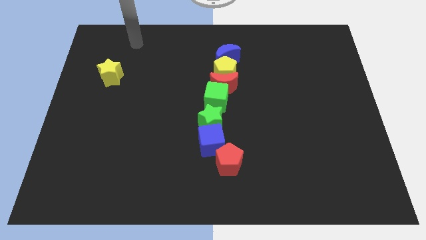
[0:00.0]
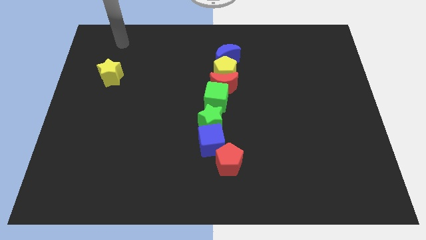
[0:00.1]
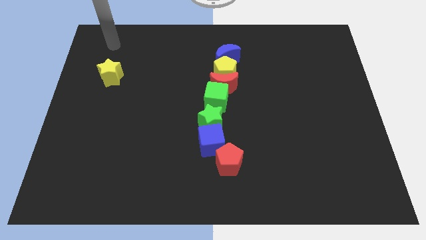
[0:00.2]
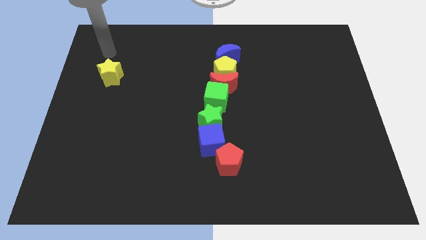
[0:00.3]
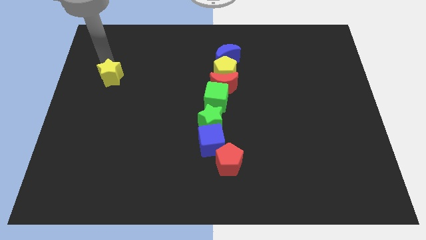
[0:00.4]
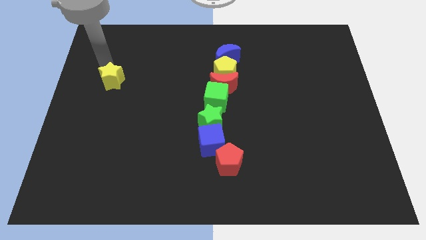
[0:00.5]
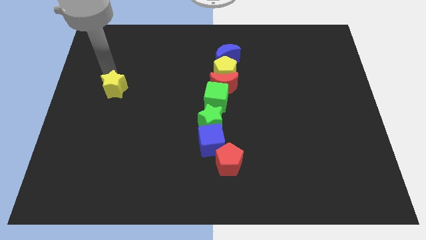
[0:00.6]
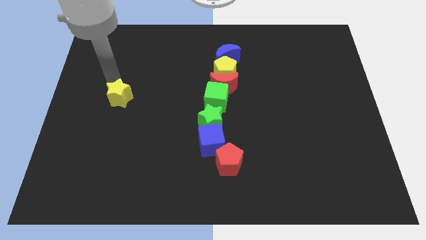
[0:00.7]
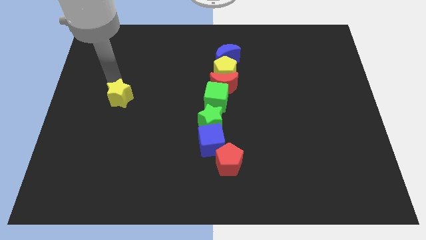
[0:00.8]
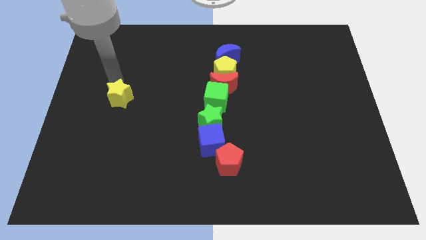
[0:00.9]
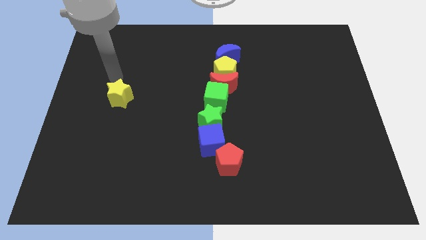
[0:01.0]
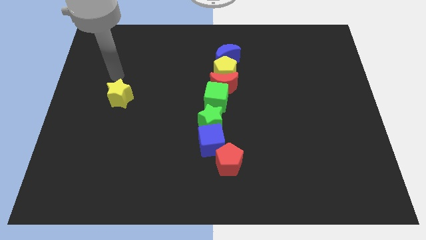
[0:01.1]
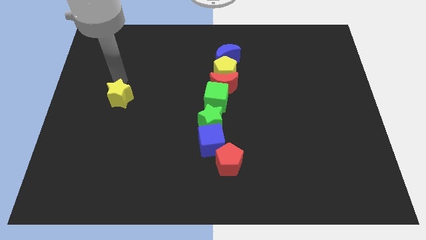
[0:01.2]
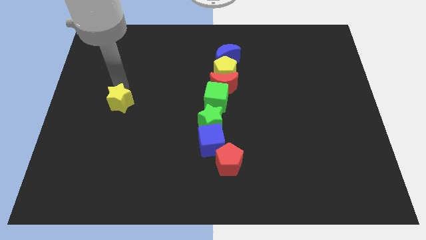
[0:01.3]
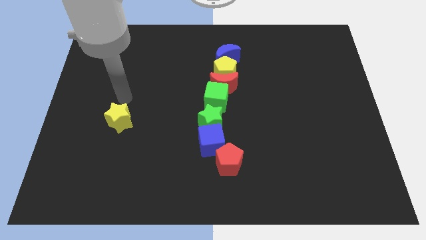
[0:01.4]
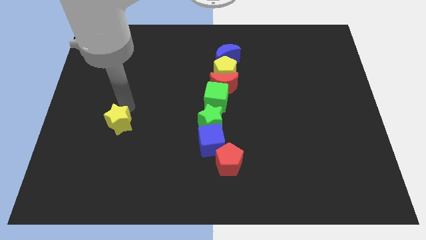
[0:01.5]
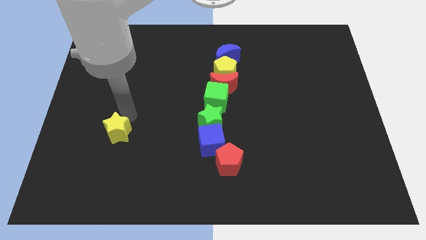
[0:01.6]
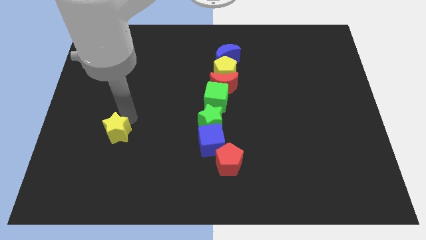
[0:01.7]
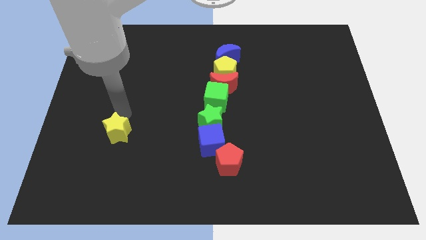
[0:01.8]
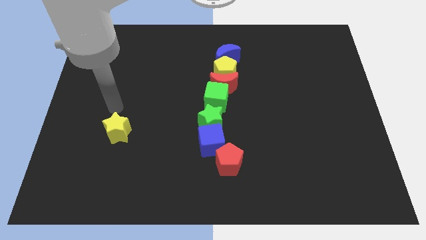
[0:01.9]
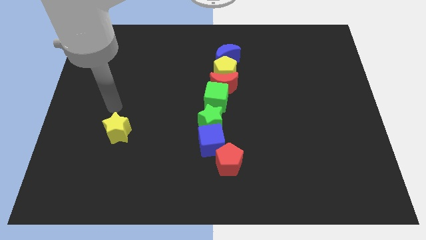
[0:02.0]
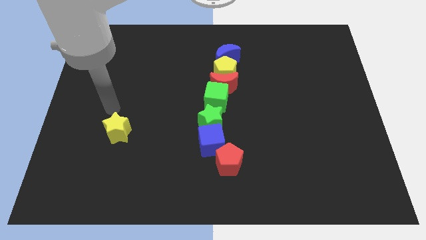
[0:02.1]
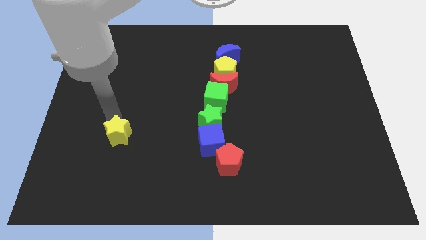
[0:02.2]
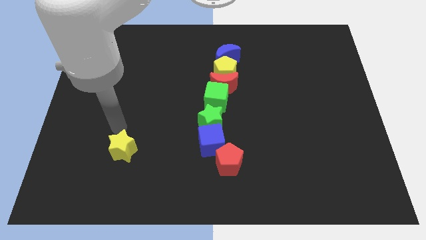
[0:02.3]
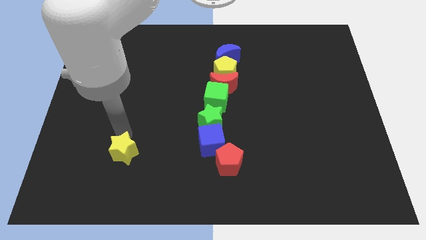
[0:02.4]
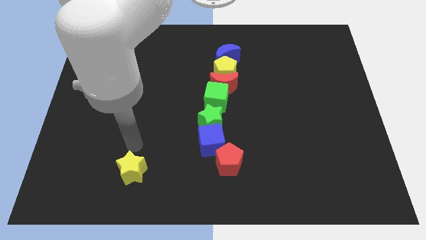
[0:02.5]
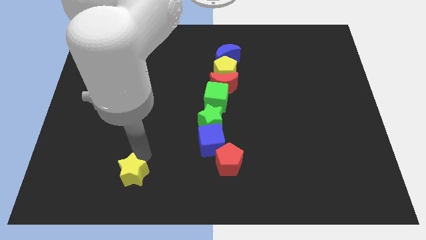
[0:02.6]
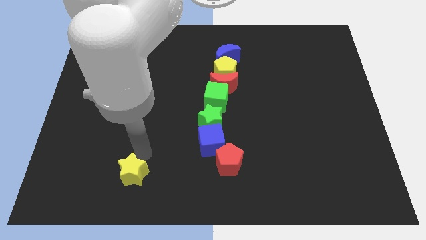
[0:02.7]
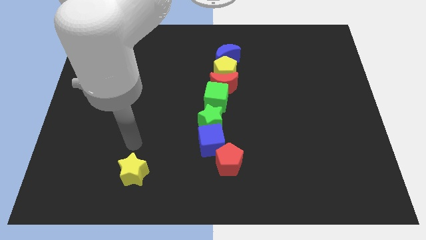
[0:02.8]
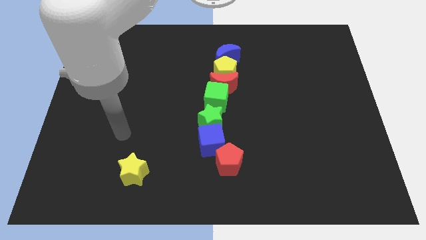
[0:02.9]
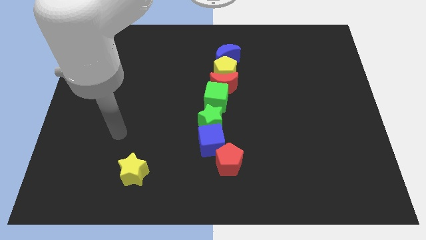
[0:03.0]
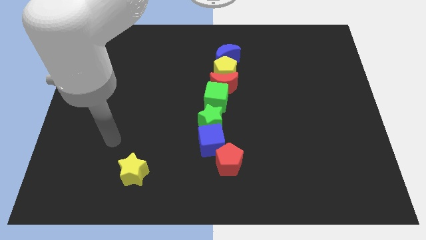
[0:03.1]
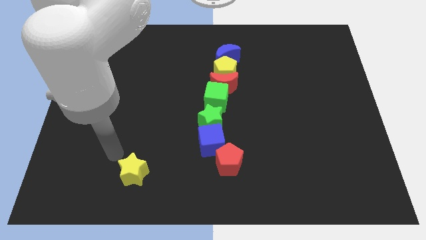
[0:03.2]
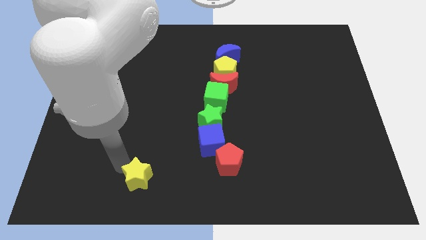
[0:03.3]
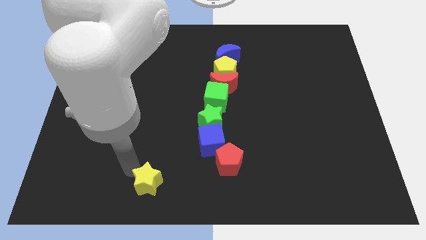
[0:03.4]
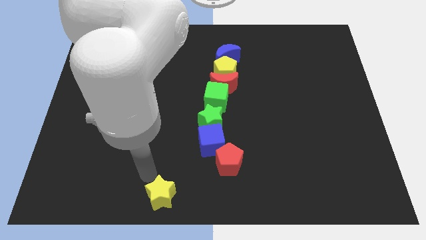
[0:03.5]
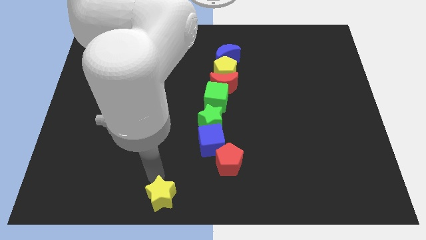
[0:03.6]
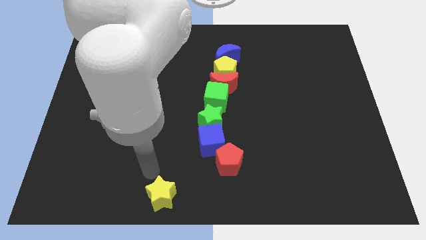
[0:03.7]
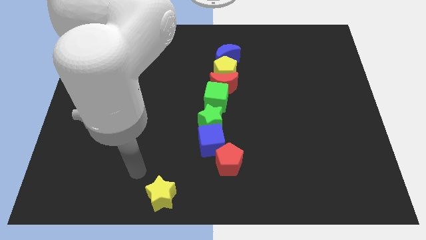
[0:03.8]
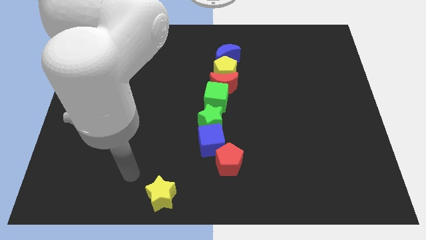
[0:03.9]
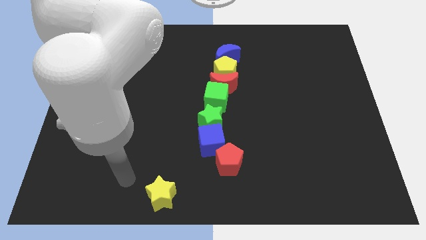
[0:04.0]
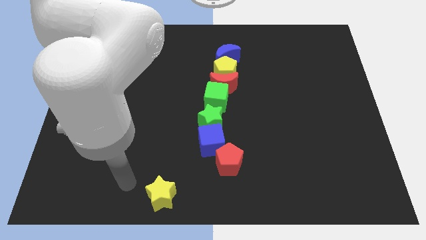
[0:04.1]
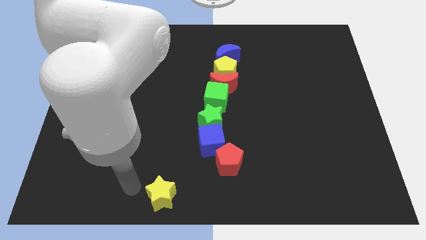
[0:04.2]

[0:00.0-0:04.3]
move the yellow star diagonally to the blue cube

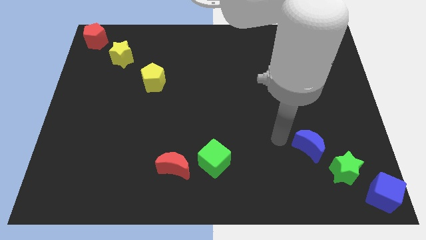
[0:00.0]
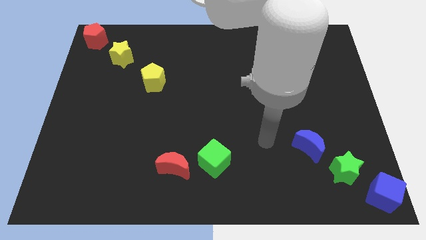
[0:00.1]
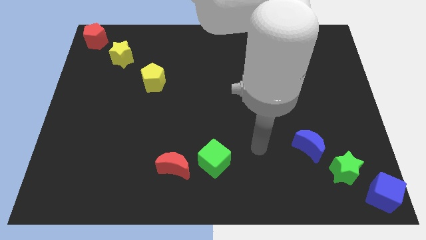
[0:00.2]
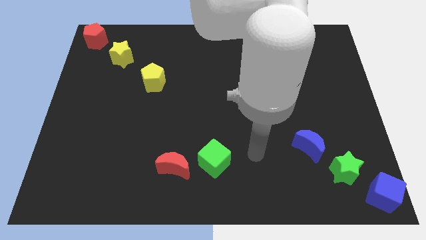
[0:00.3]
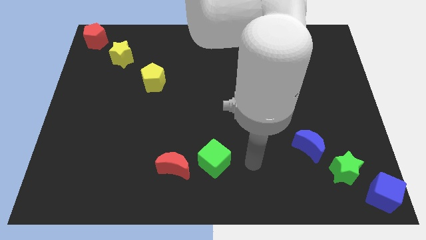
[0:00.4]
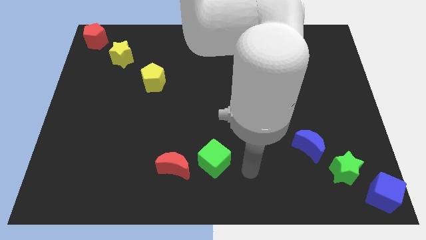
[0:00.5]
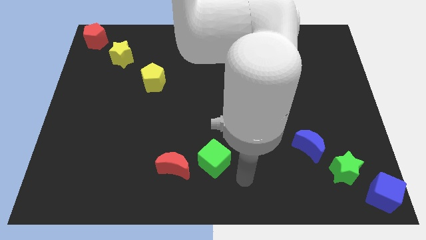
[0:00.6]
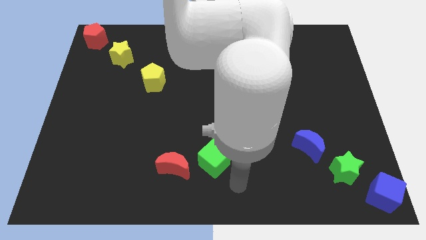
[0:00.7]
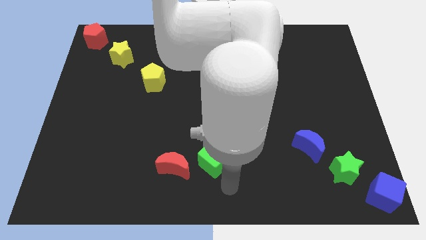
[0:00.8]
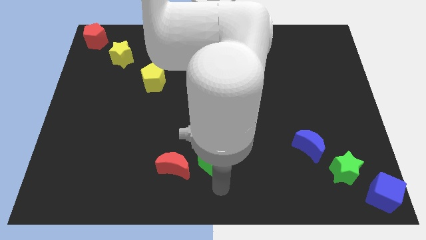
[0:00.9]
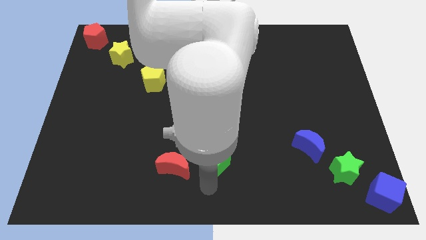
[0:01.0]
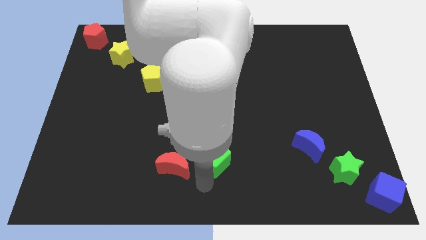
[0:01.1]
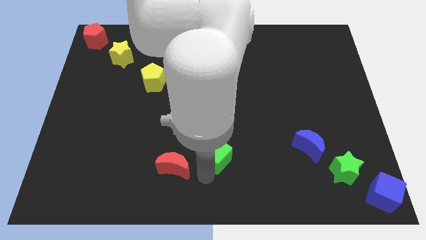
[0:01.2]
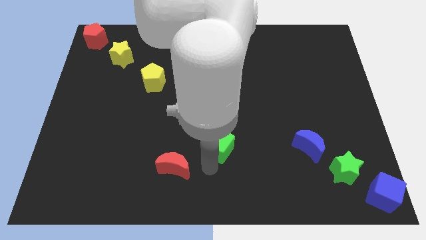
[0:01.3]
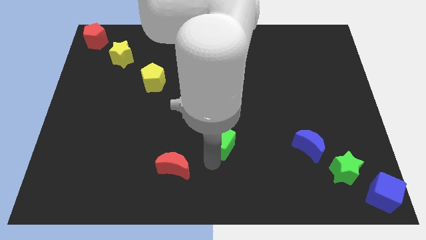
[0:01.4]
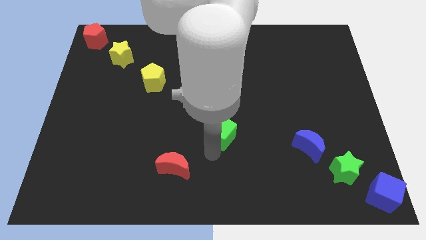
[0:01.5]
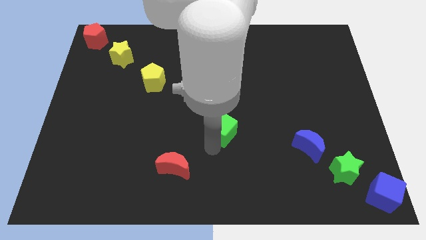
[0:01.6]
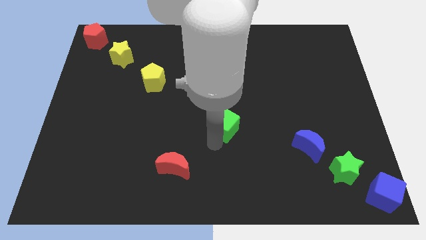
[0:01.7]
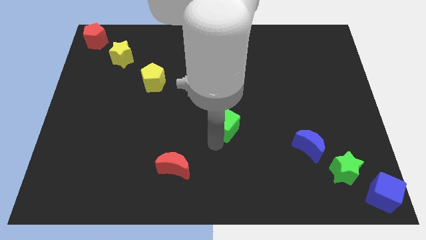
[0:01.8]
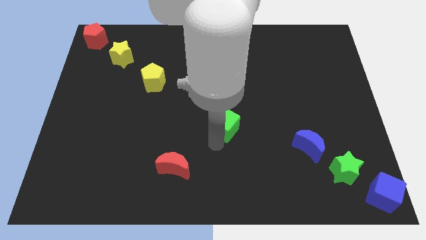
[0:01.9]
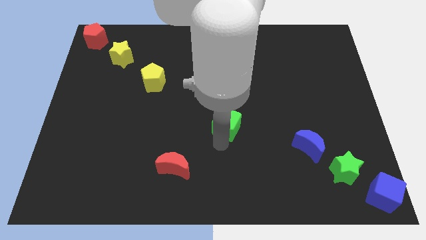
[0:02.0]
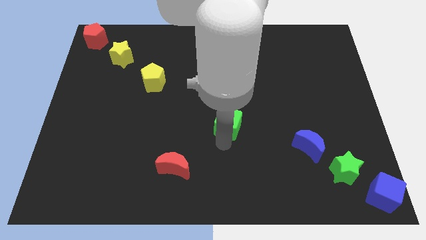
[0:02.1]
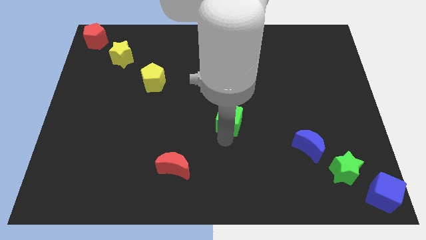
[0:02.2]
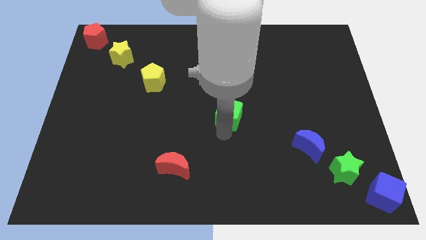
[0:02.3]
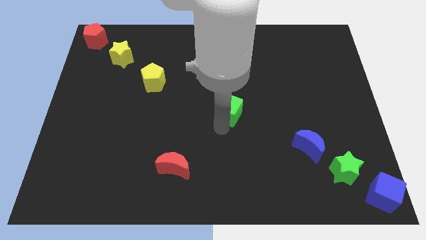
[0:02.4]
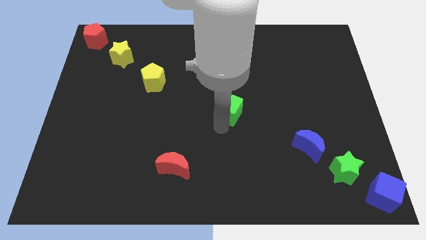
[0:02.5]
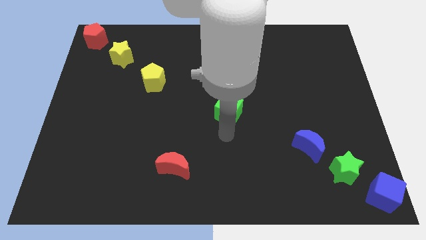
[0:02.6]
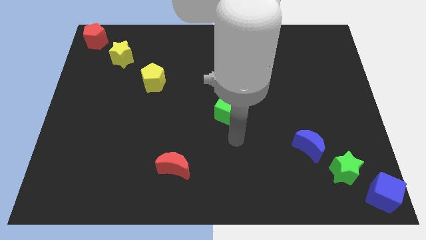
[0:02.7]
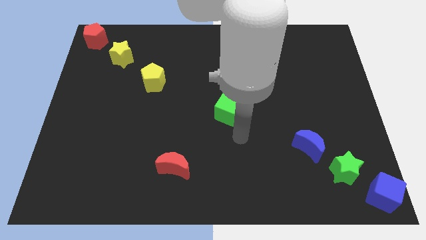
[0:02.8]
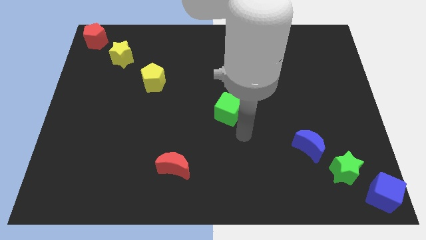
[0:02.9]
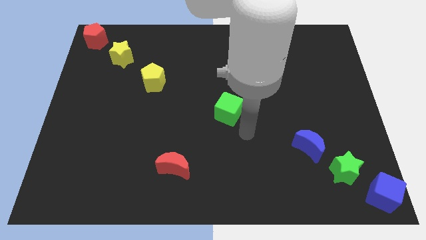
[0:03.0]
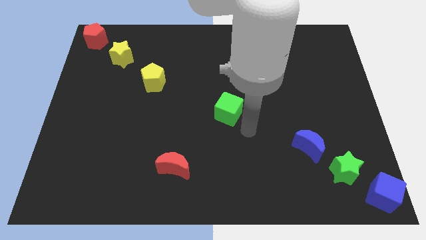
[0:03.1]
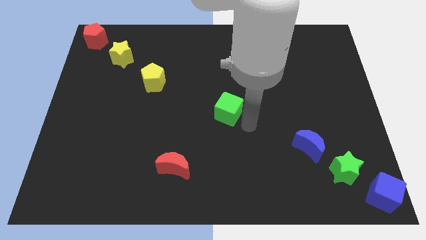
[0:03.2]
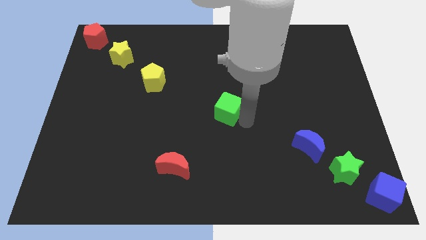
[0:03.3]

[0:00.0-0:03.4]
push green cube to the centre of the board

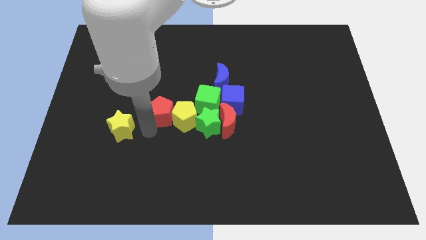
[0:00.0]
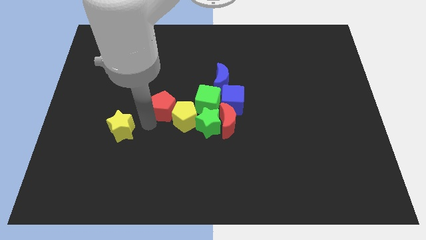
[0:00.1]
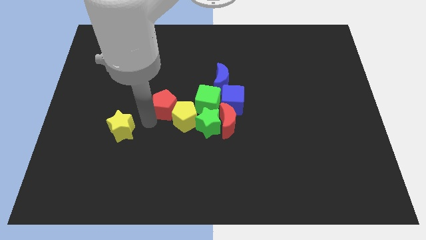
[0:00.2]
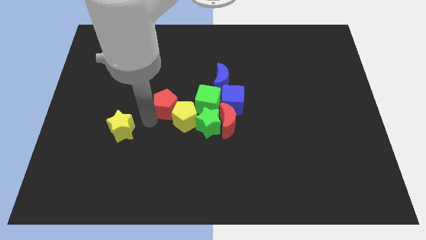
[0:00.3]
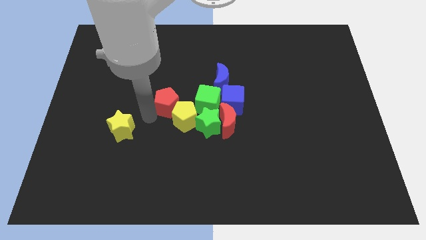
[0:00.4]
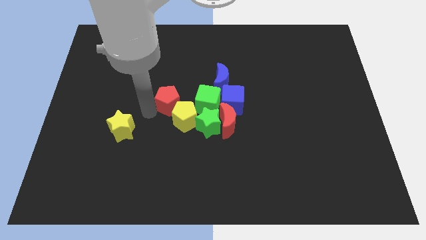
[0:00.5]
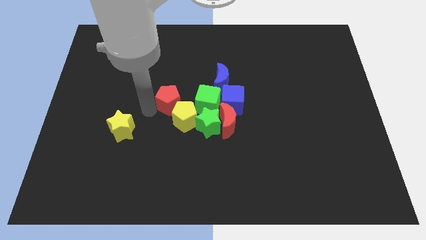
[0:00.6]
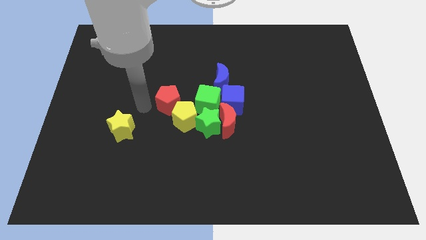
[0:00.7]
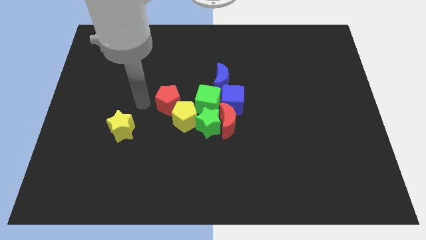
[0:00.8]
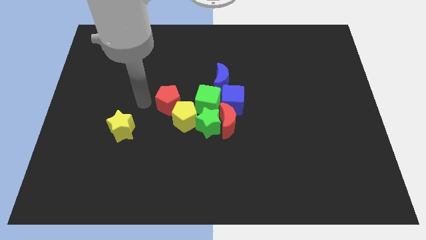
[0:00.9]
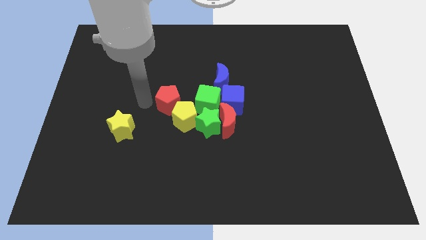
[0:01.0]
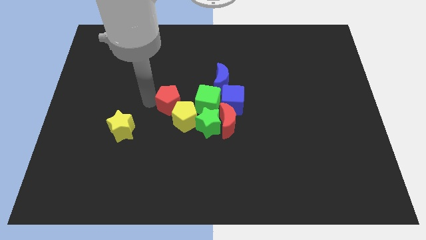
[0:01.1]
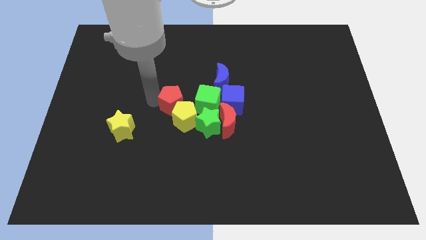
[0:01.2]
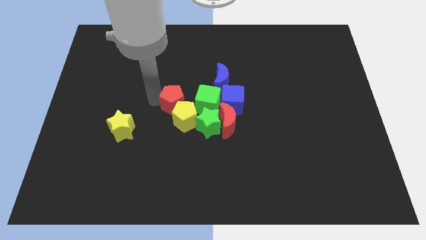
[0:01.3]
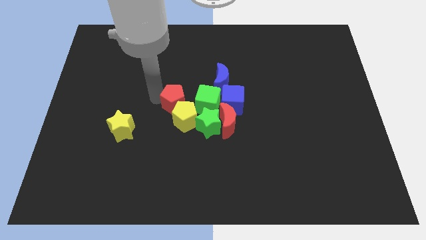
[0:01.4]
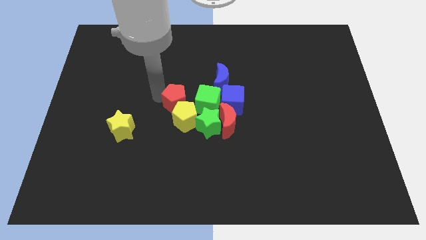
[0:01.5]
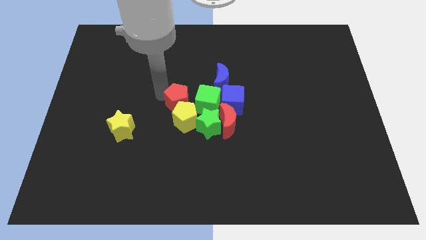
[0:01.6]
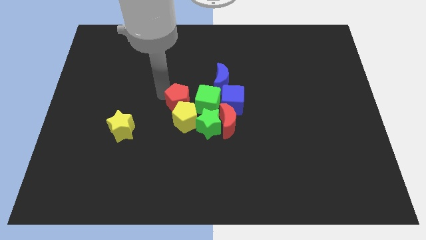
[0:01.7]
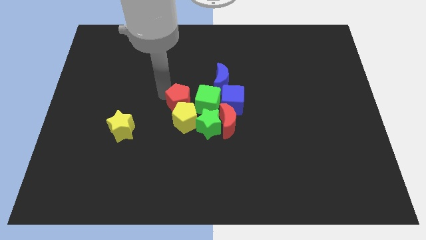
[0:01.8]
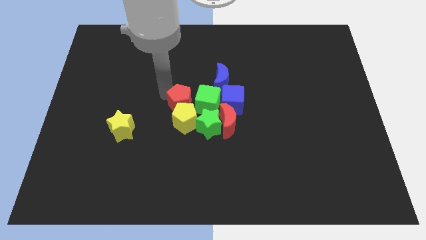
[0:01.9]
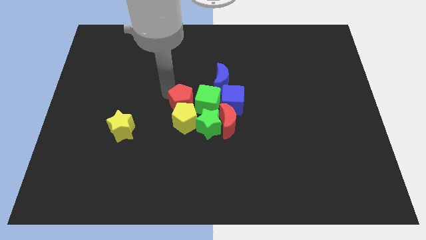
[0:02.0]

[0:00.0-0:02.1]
slide red pentagon on top of yellow pentagon
